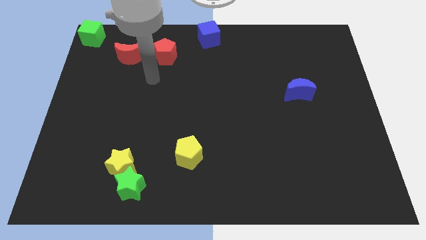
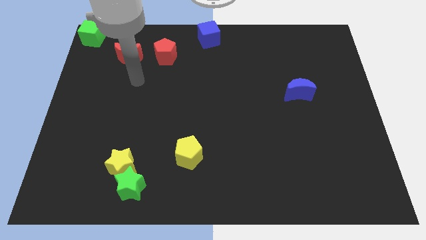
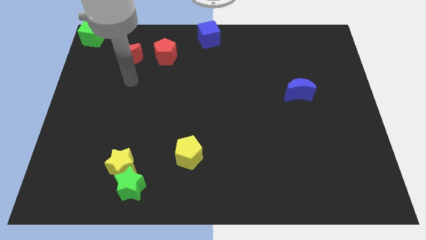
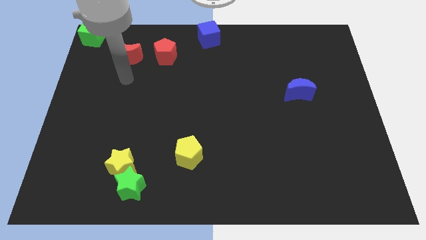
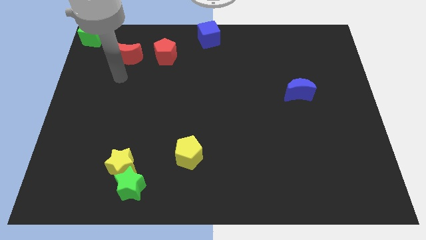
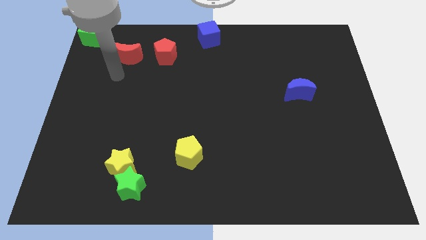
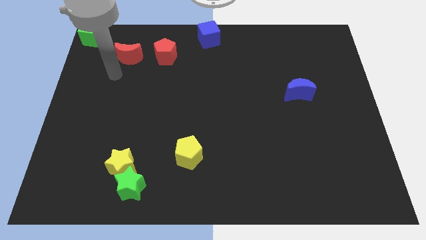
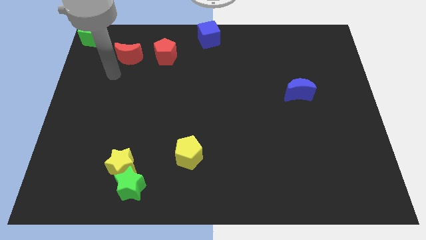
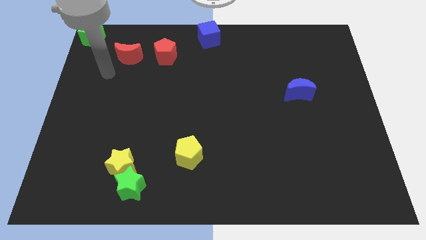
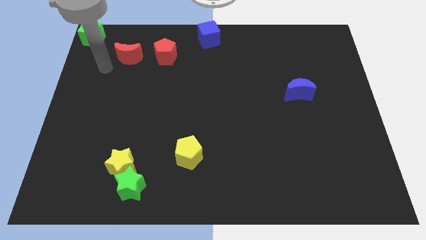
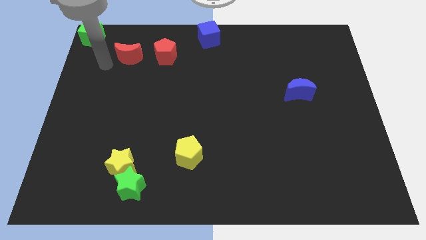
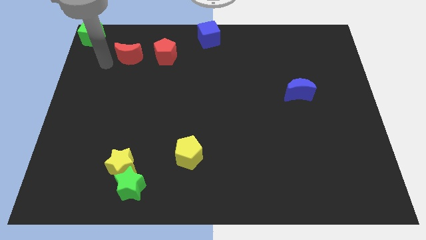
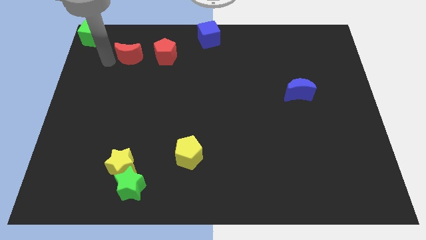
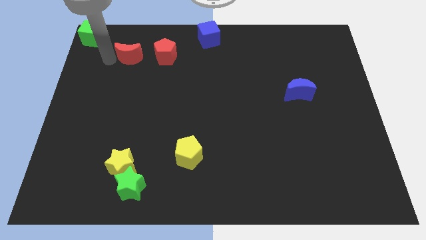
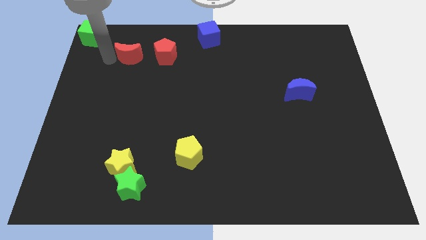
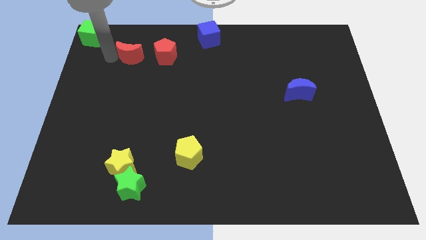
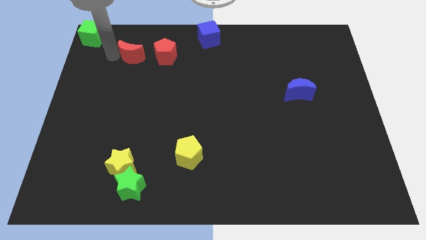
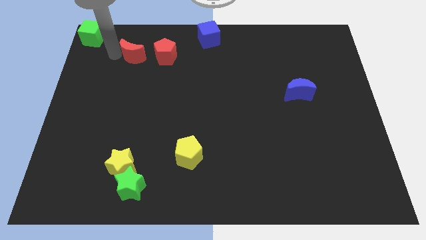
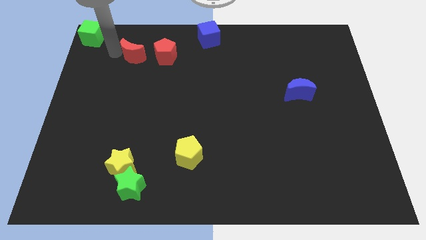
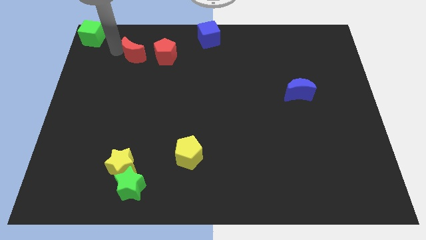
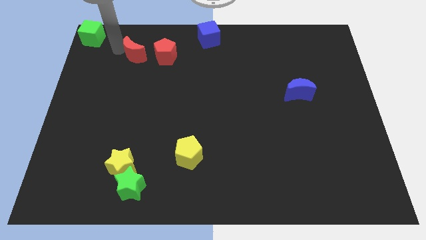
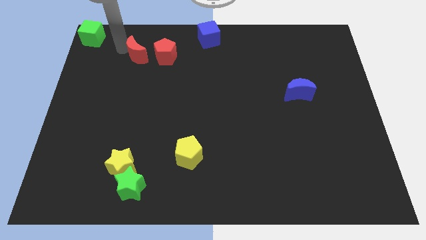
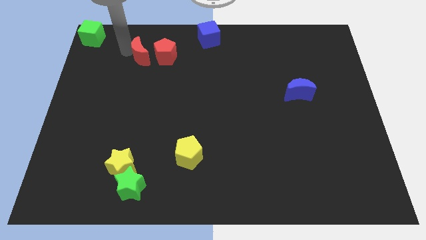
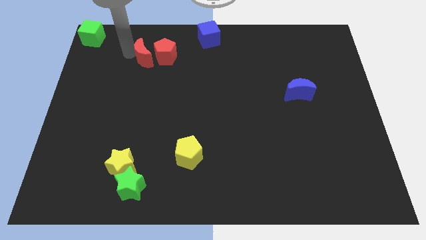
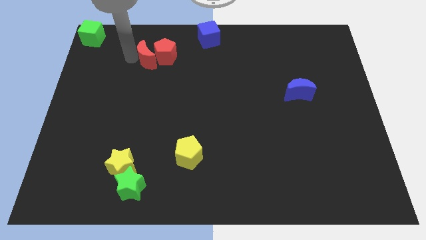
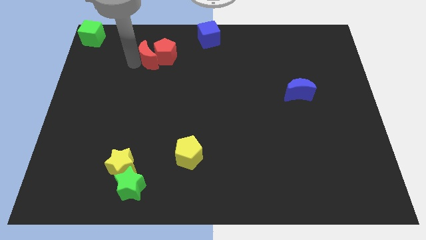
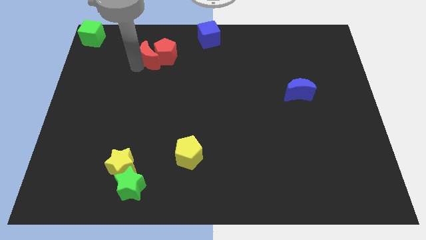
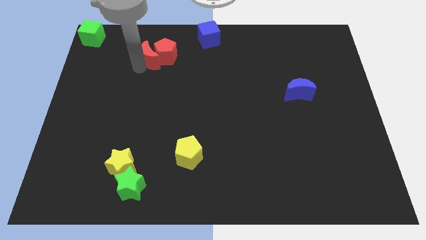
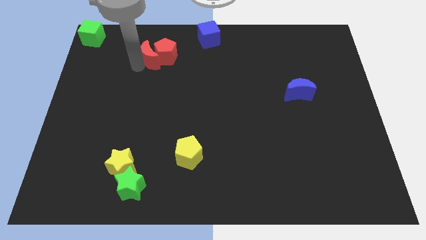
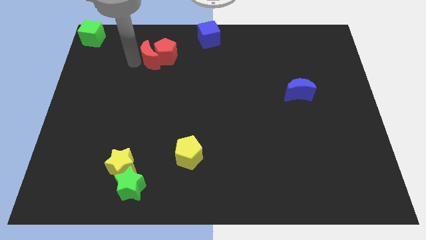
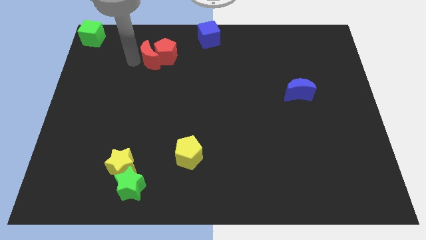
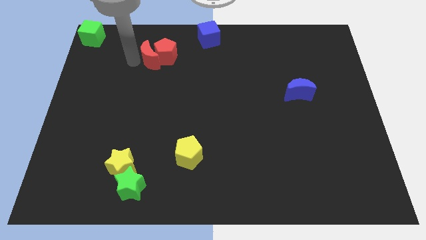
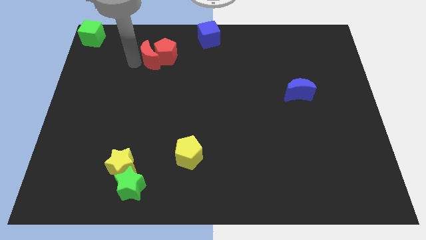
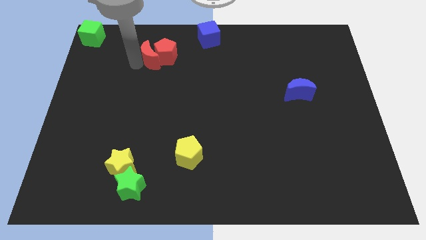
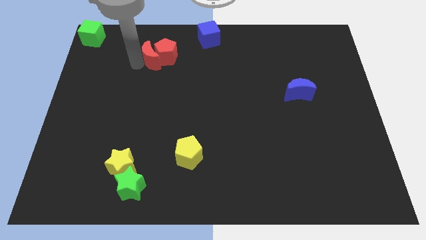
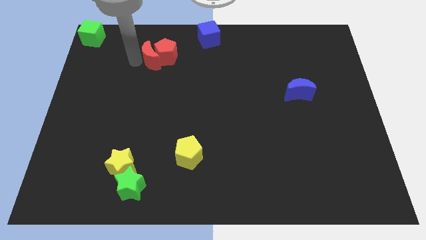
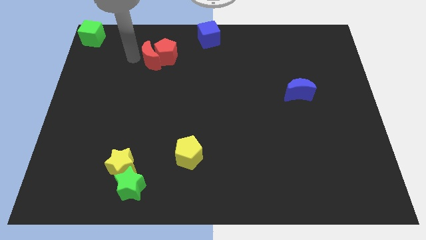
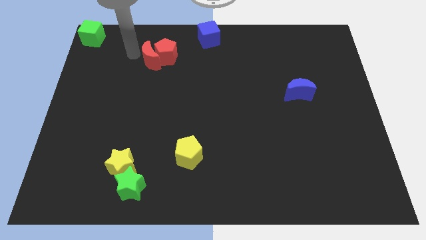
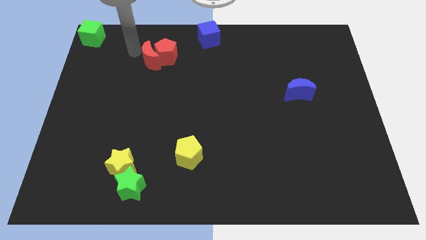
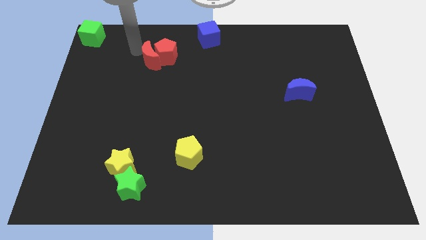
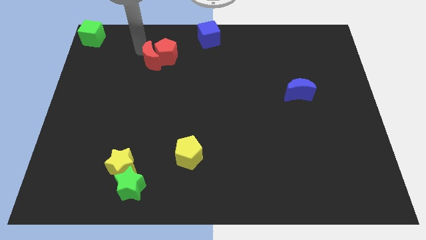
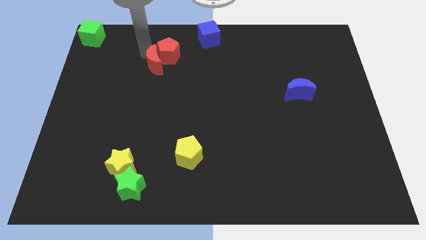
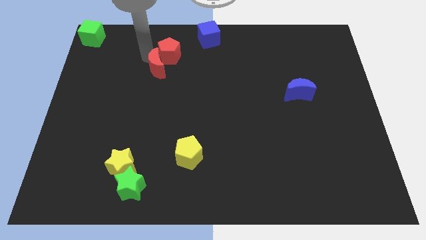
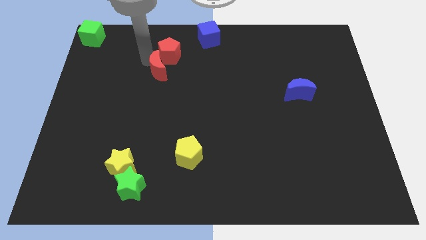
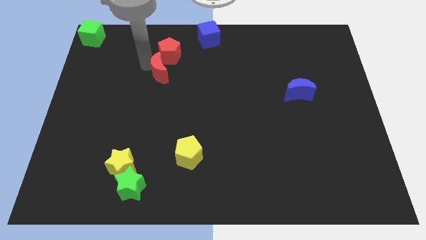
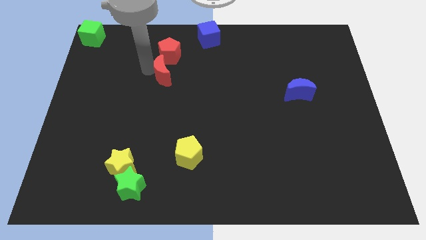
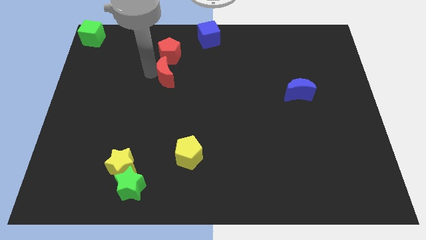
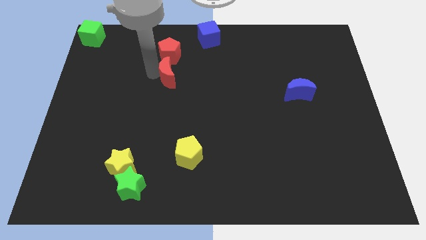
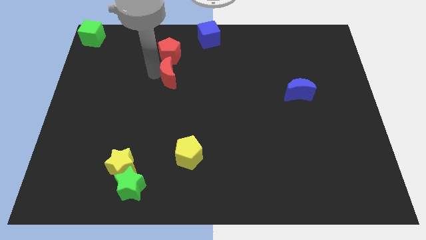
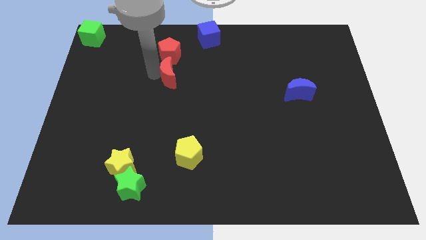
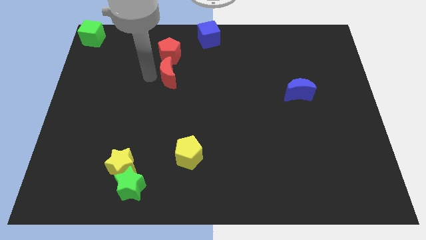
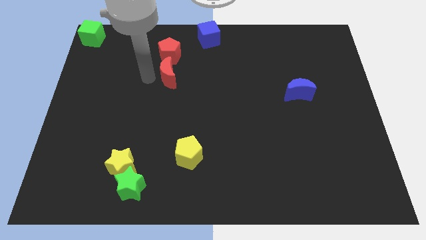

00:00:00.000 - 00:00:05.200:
move red moon below the red pentagon

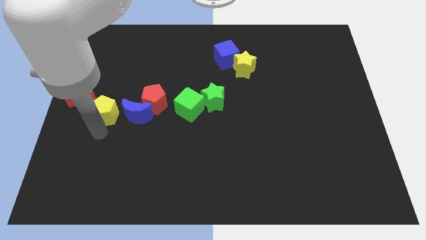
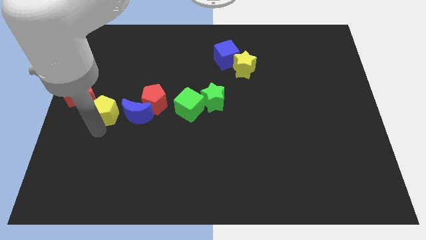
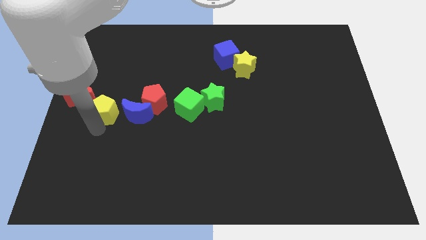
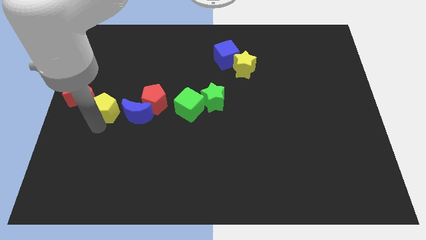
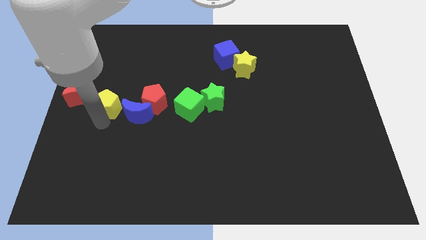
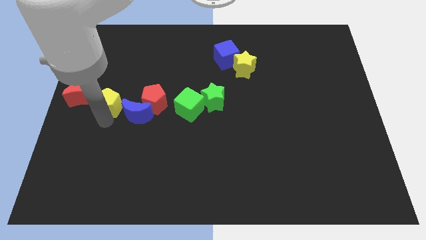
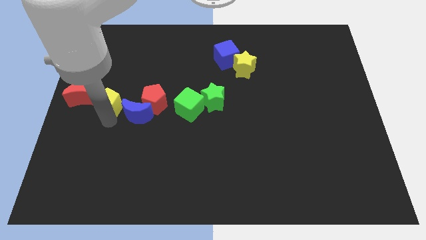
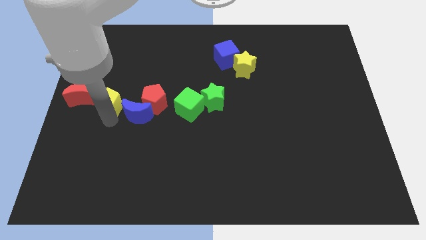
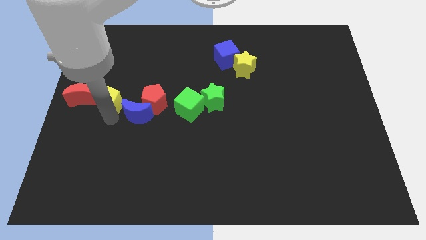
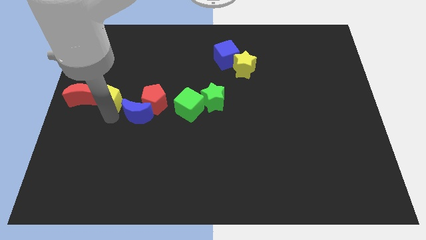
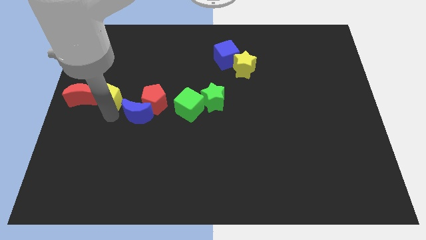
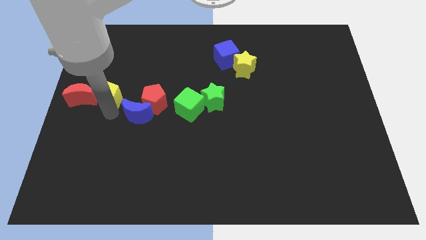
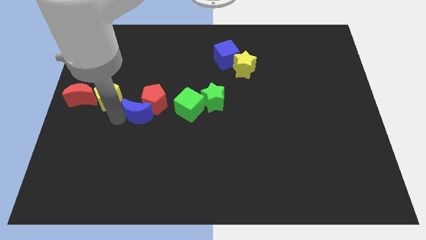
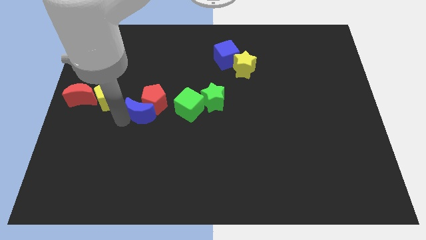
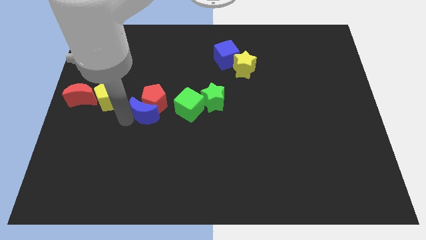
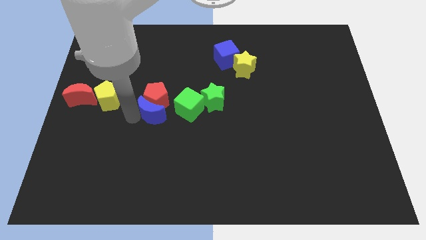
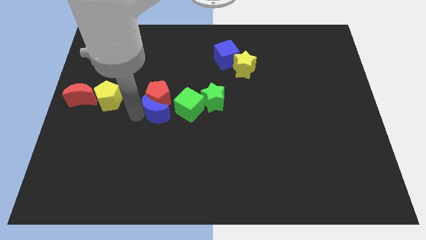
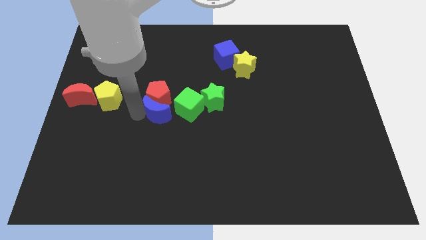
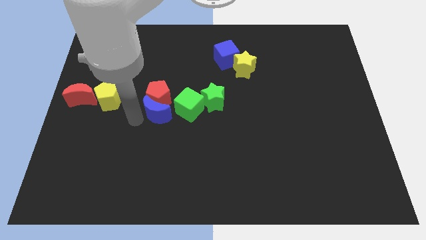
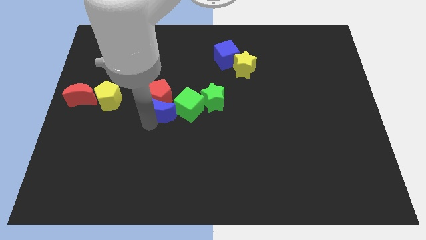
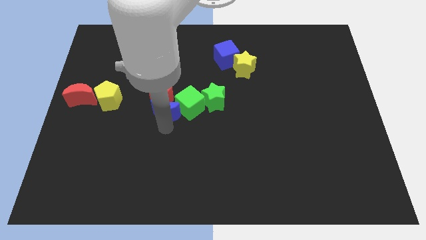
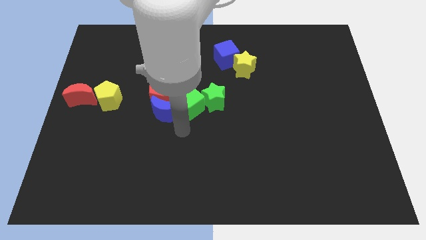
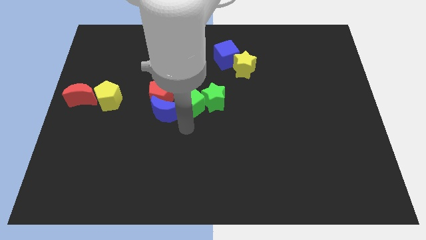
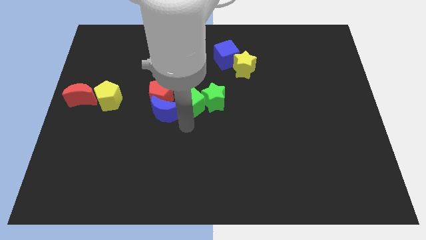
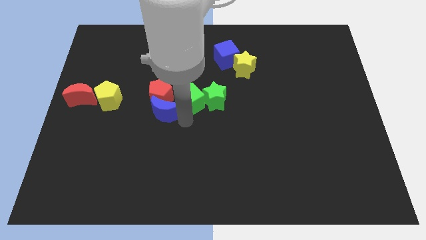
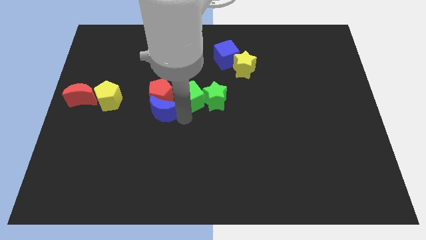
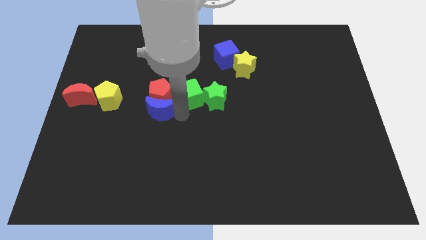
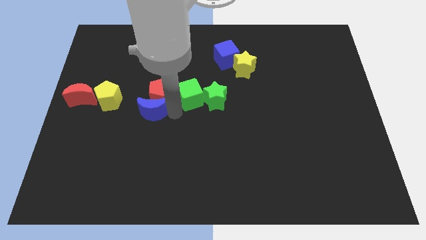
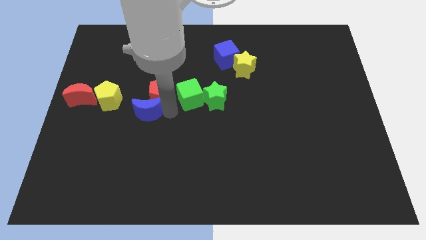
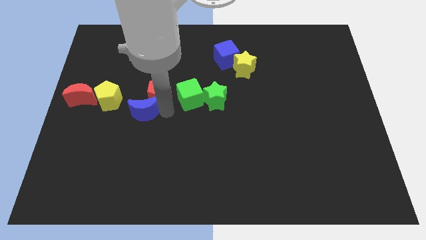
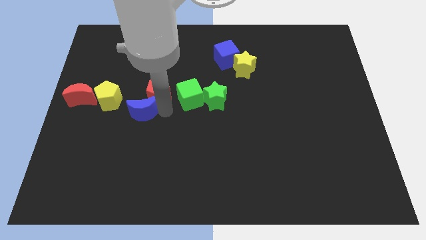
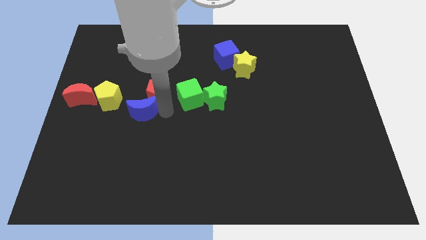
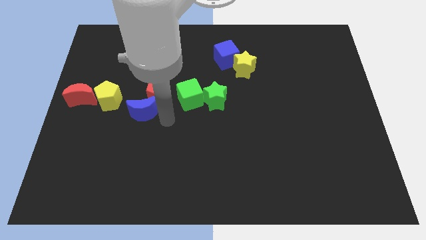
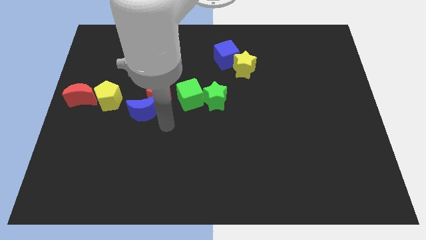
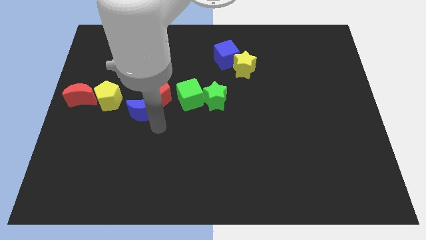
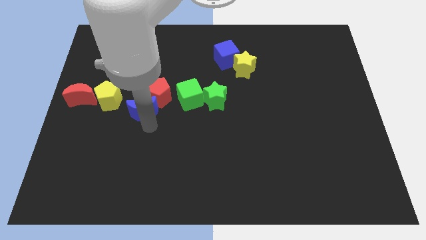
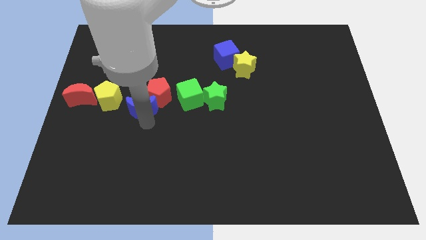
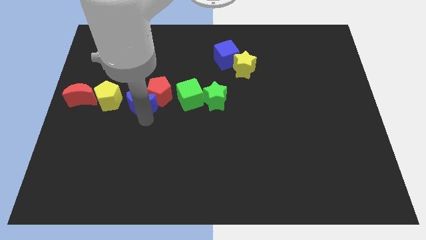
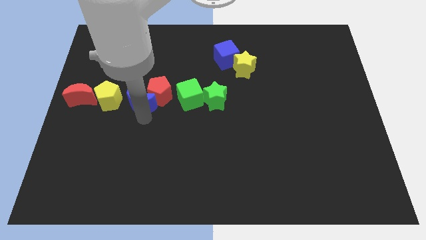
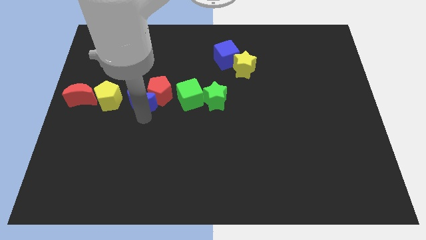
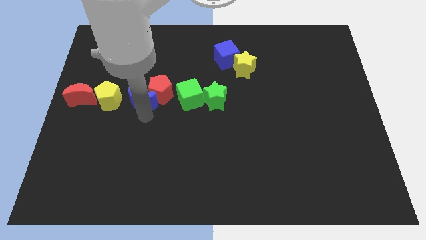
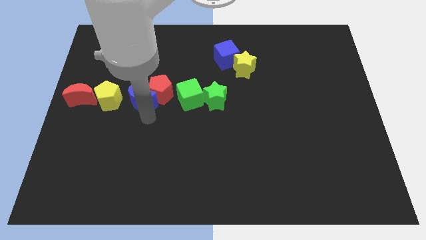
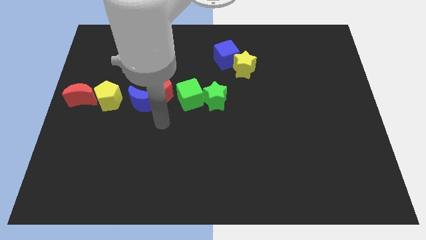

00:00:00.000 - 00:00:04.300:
adjust the yellow pentagon and blue moon to the right side of the red moon
